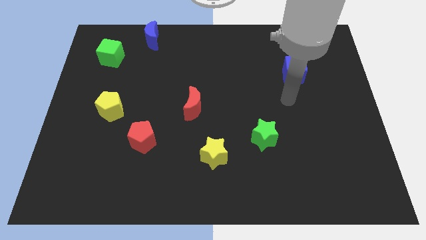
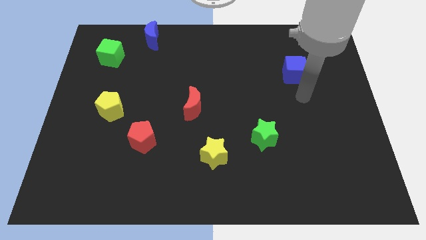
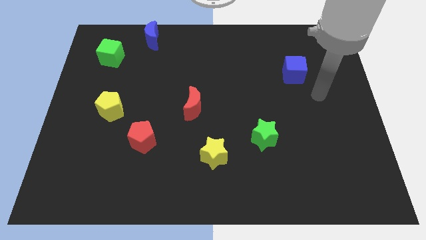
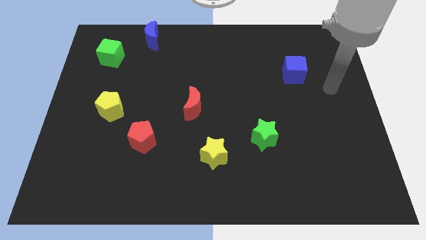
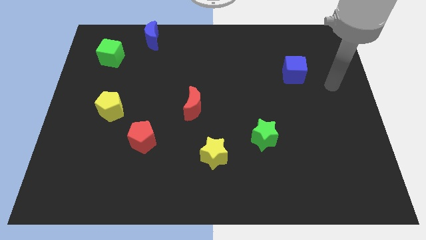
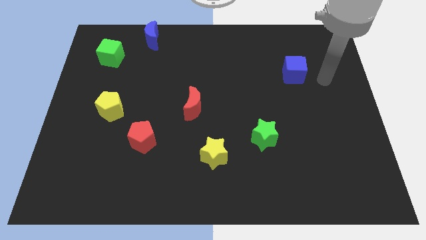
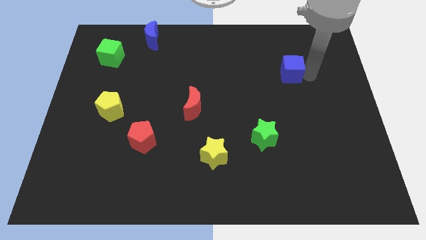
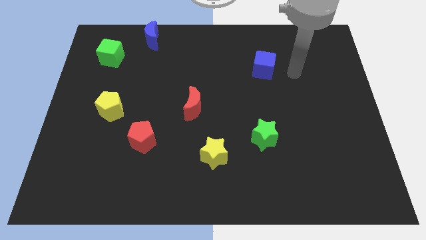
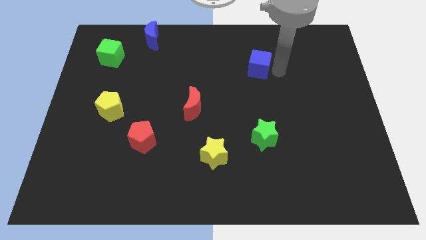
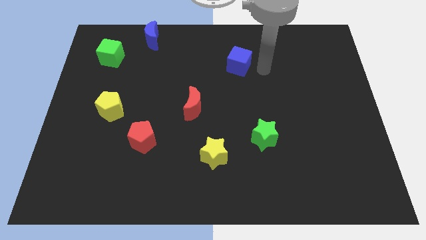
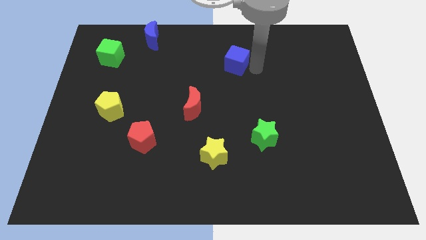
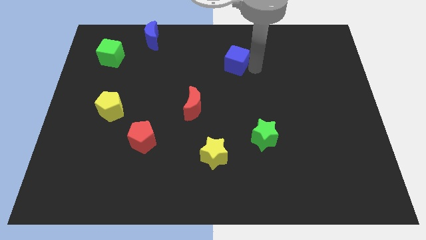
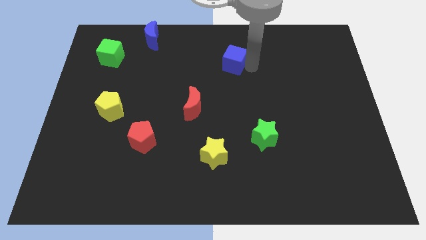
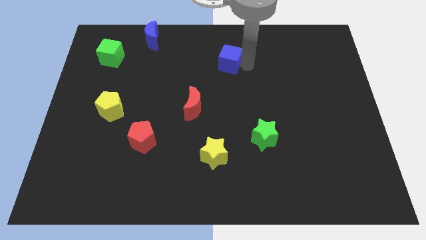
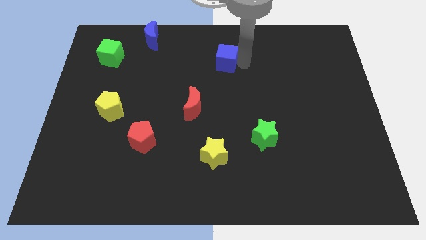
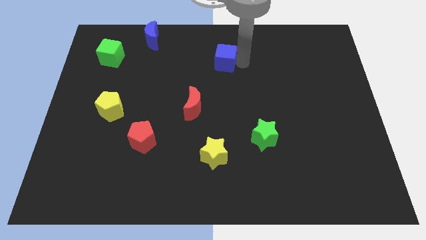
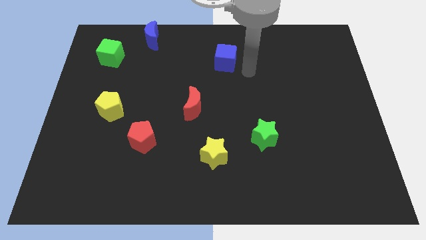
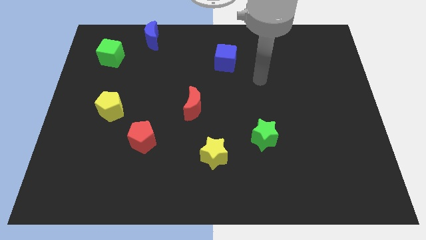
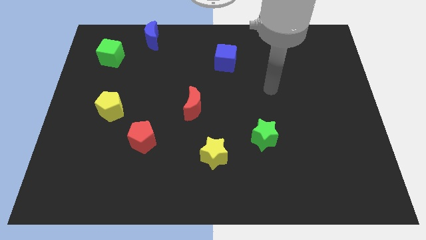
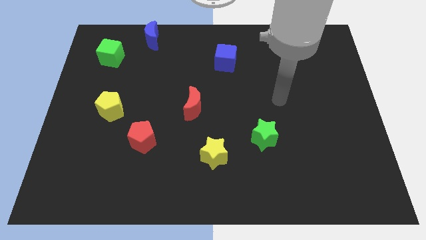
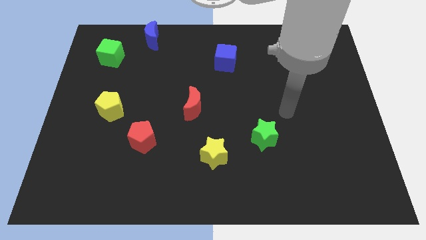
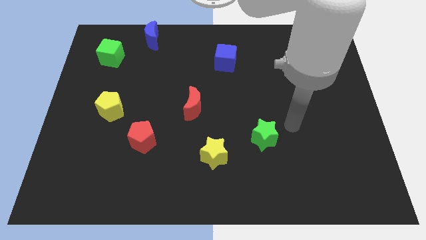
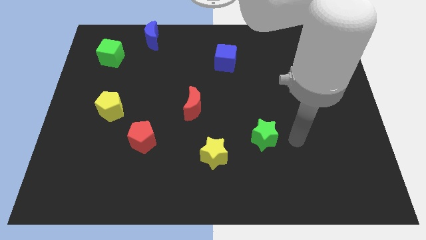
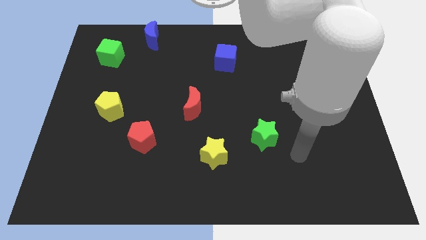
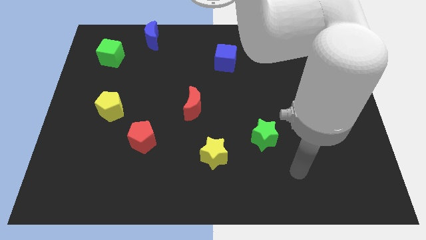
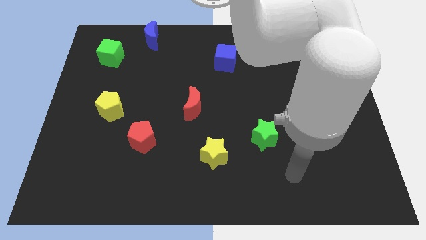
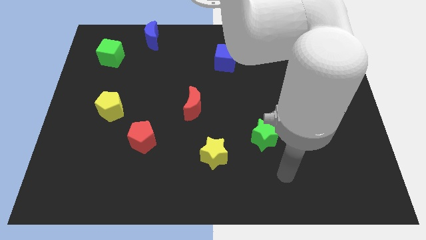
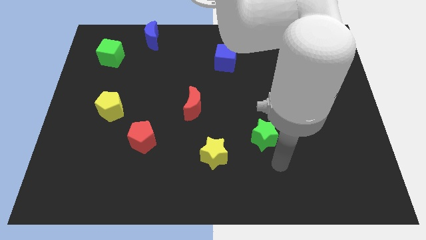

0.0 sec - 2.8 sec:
push the blue cube diagonal to the red moon

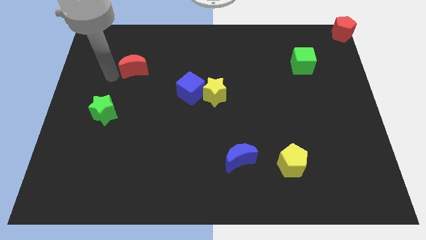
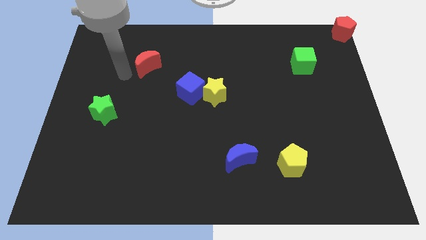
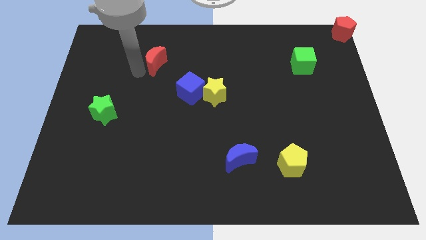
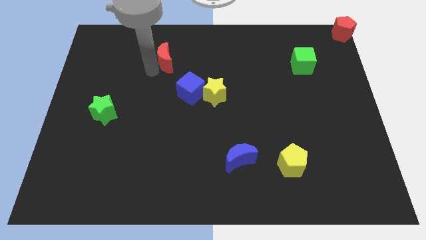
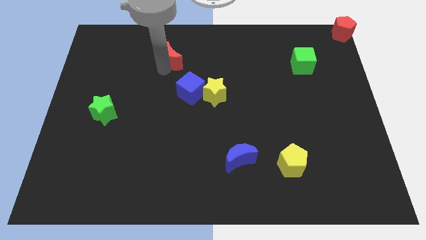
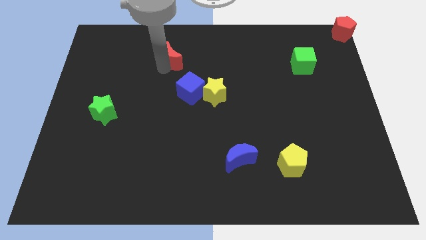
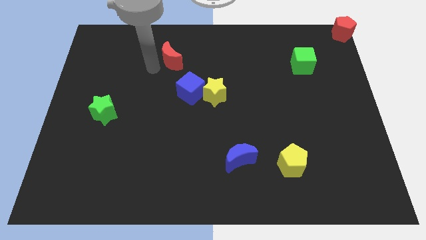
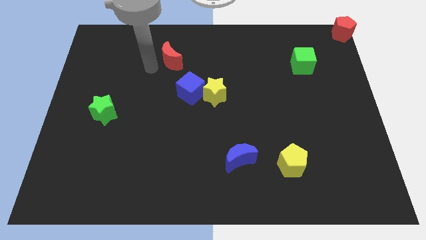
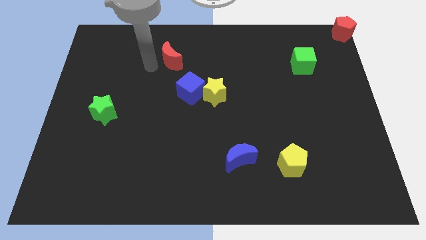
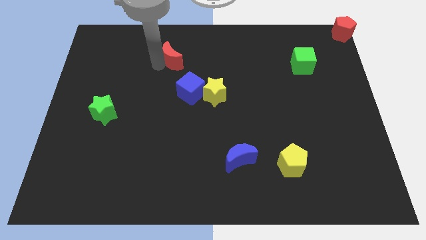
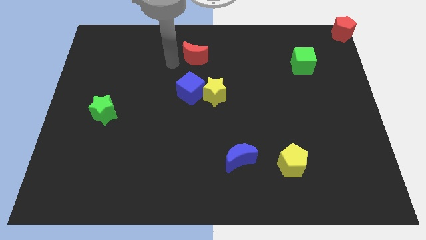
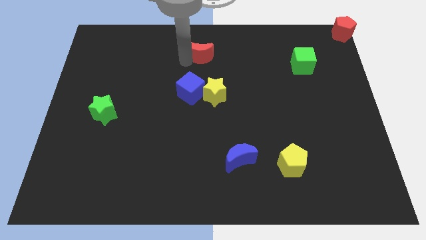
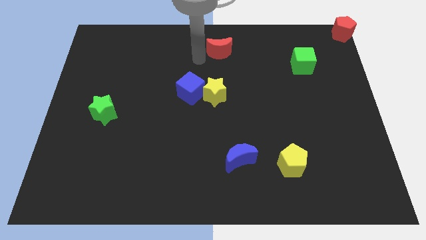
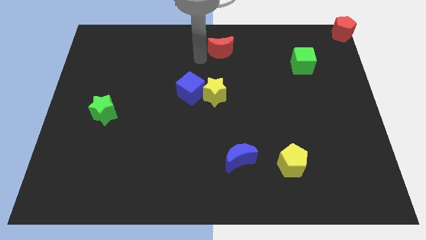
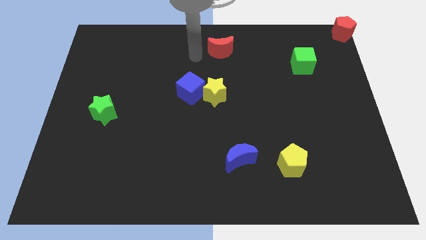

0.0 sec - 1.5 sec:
push the red crescent towards the top center of the board

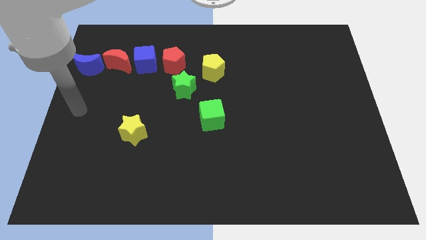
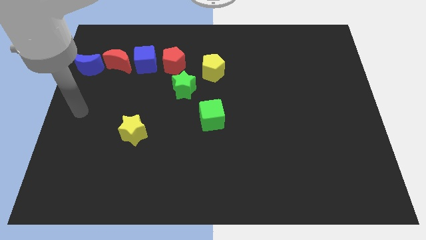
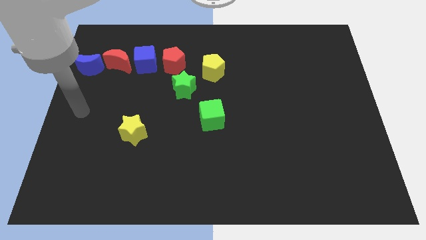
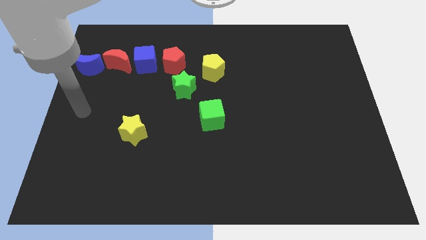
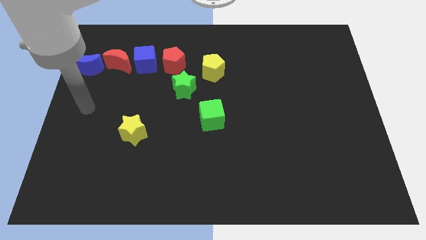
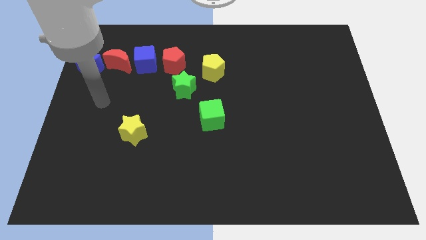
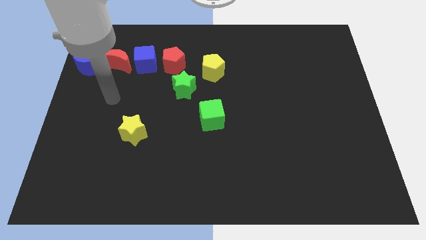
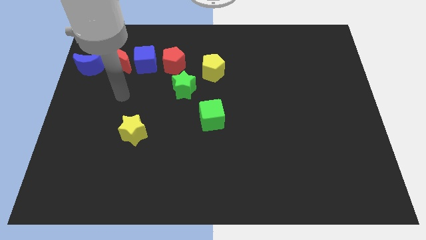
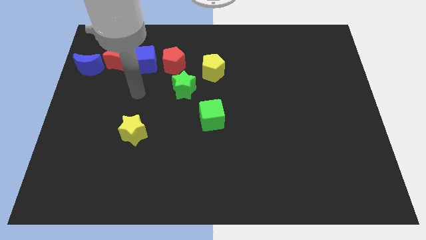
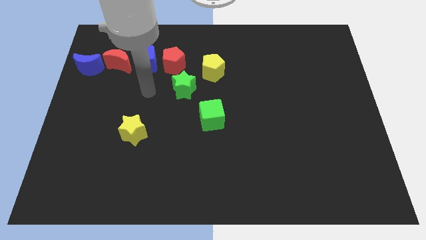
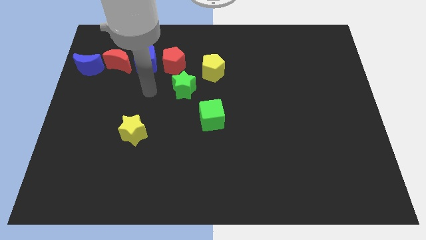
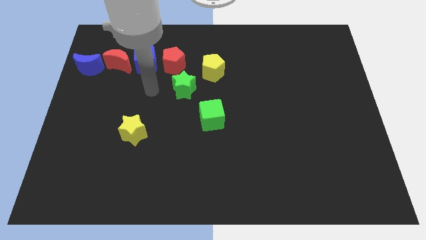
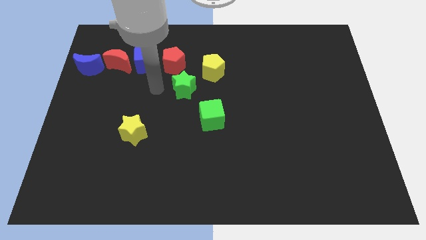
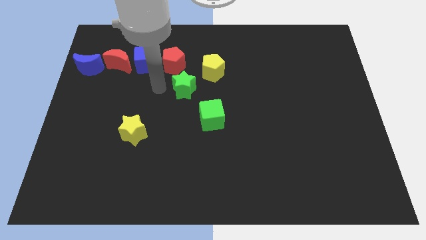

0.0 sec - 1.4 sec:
place your hand to the left of the green star

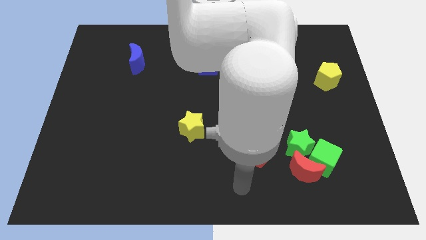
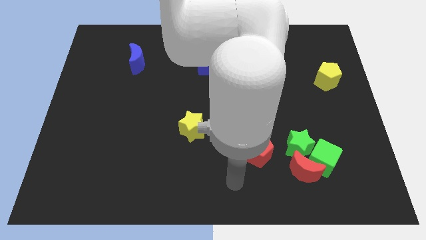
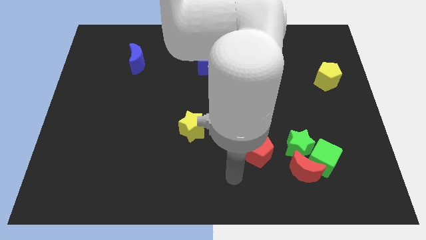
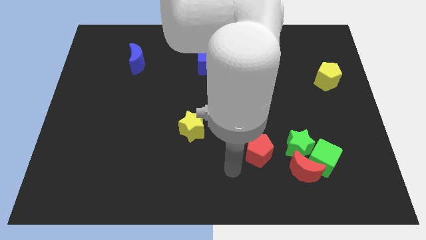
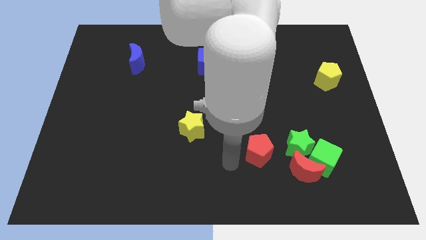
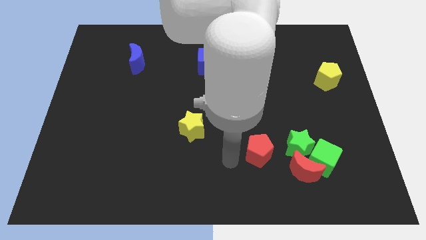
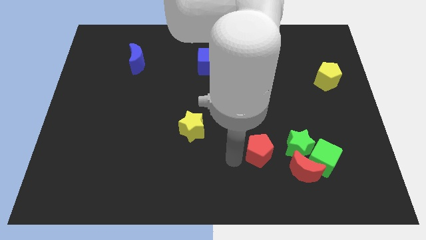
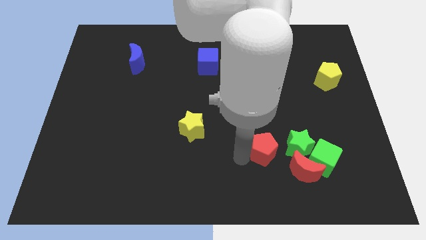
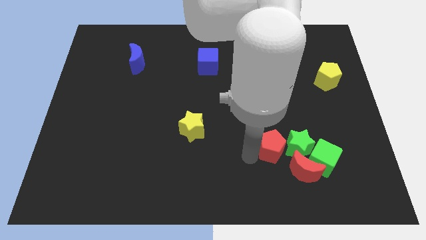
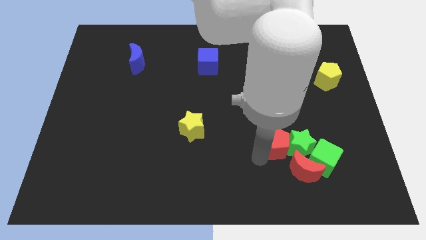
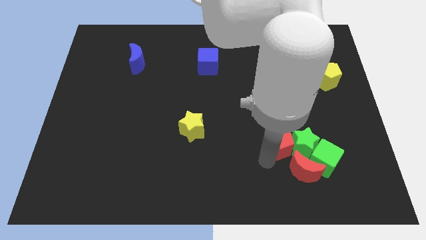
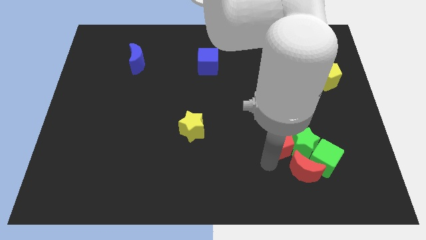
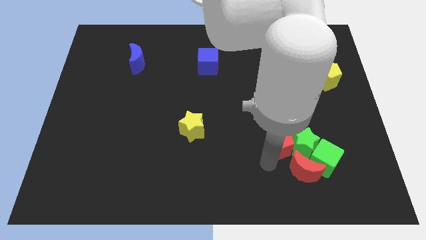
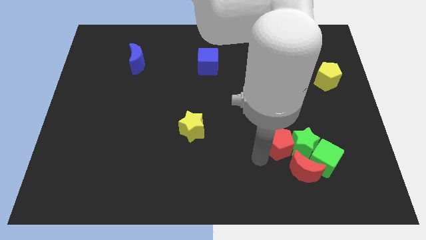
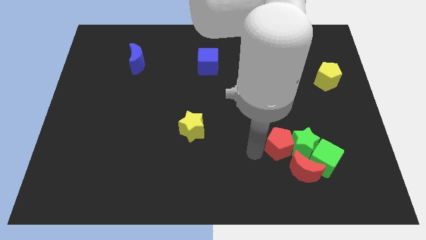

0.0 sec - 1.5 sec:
push the red pentagon into the group of both the green blocks and the red moon

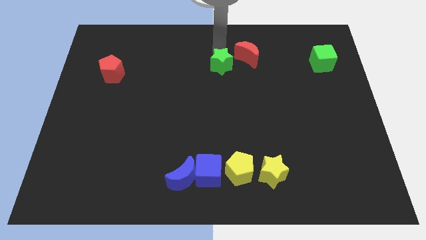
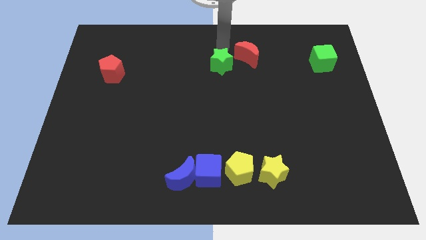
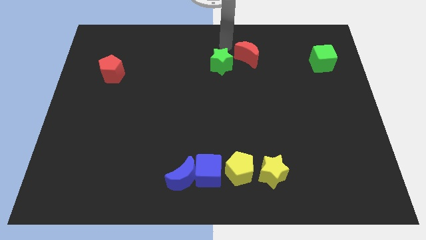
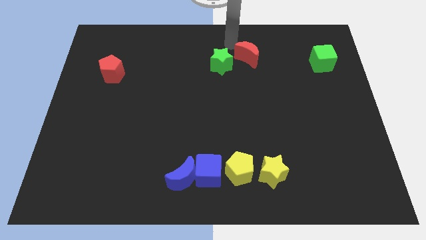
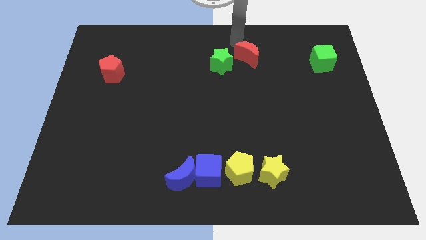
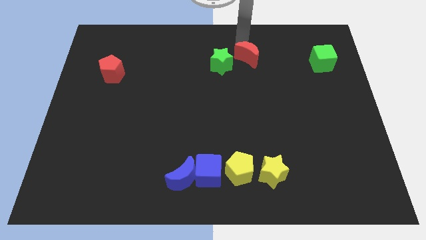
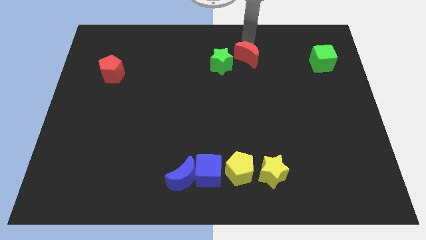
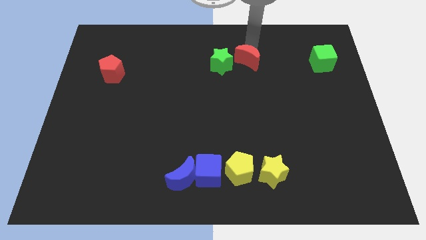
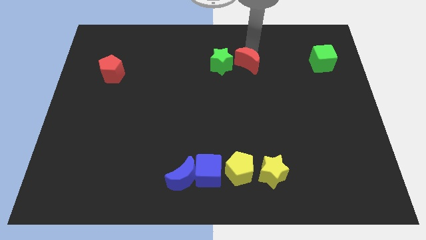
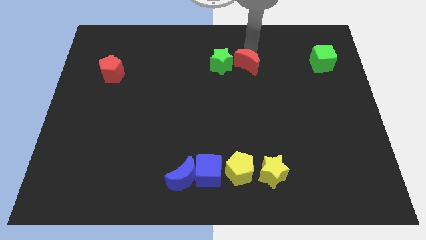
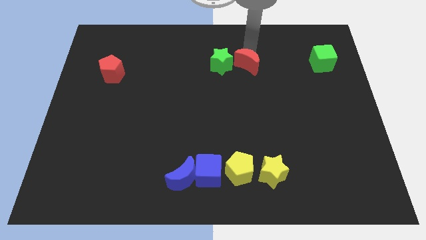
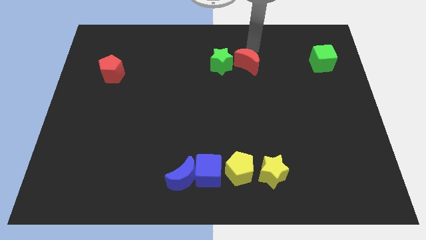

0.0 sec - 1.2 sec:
place the red moon in between the green blocks

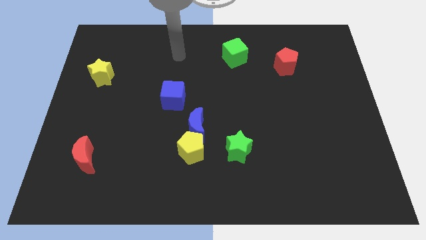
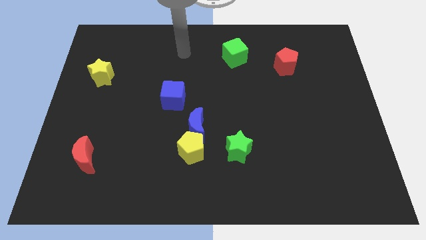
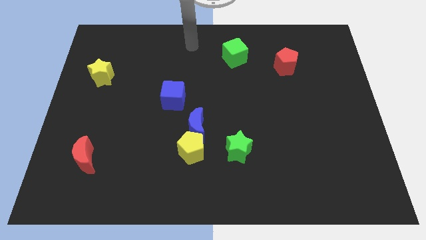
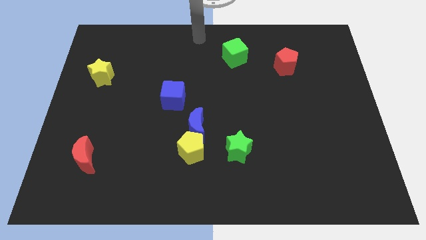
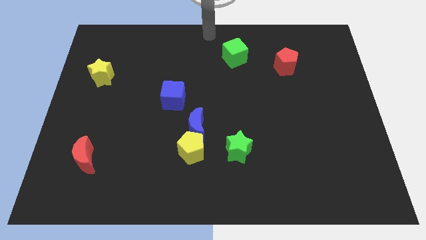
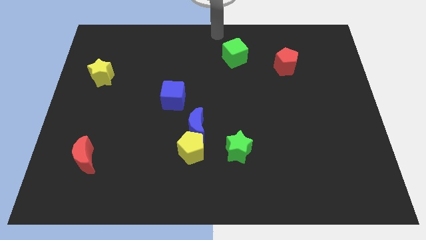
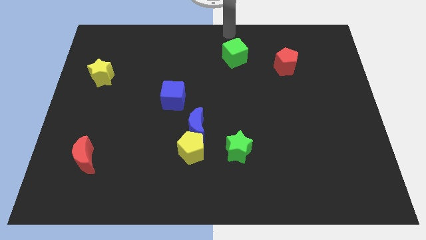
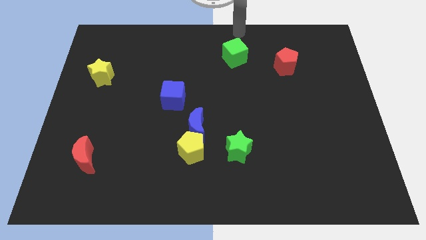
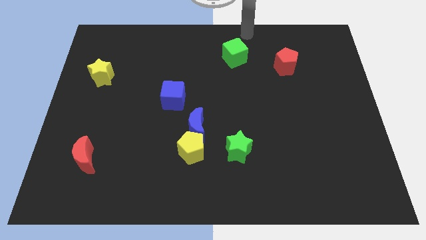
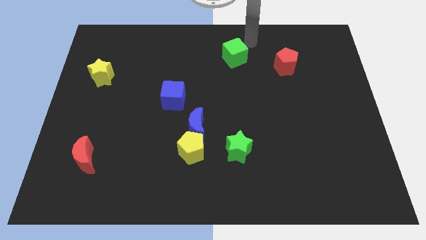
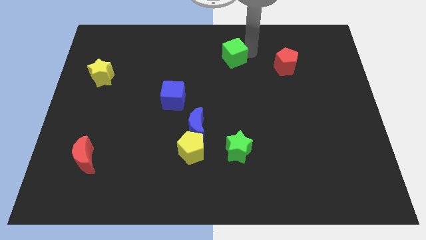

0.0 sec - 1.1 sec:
point your arm at the right of the green cube
